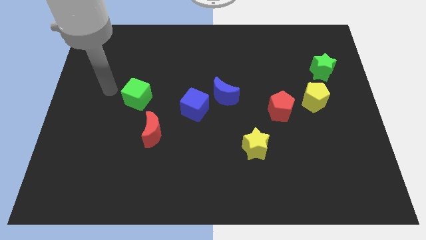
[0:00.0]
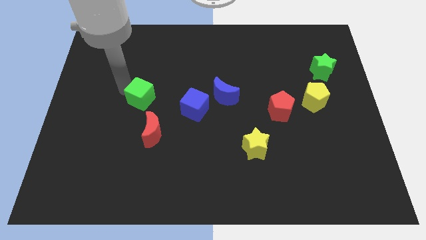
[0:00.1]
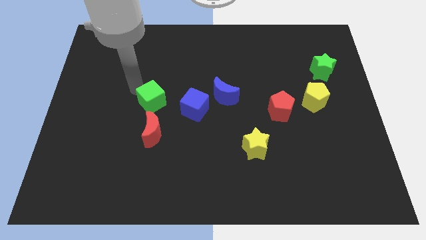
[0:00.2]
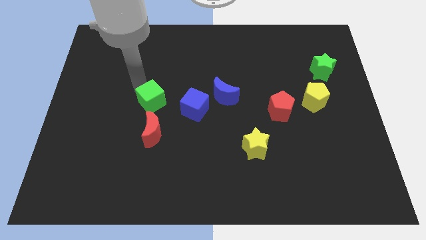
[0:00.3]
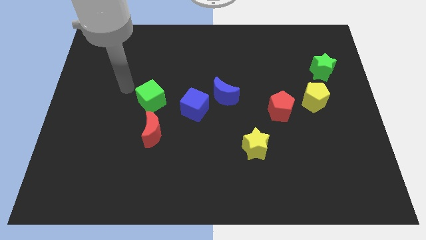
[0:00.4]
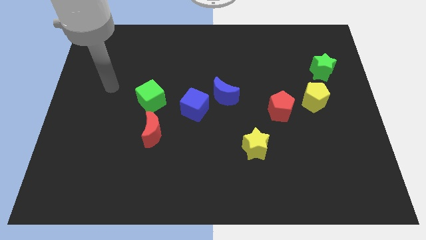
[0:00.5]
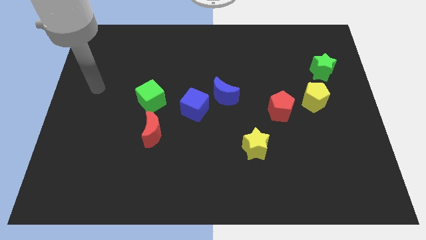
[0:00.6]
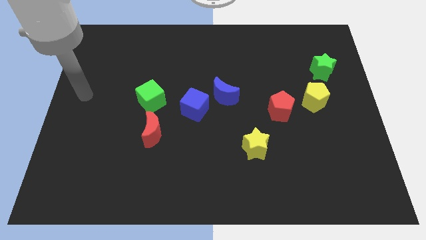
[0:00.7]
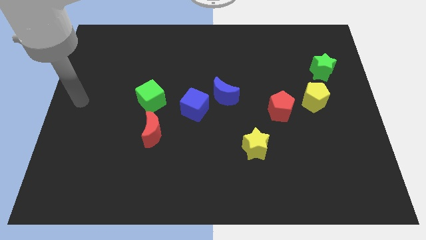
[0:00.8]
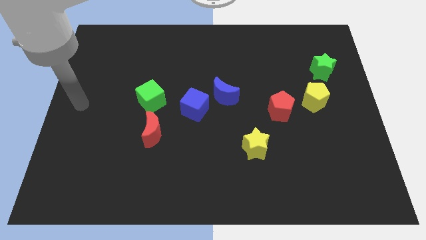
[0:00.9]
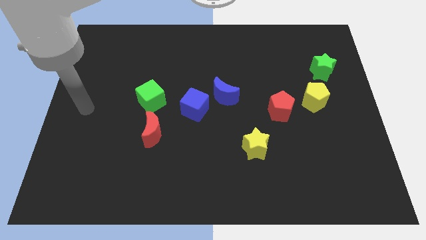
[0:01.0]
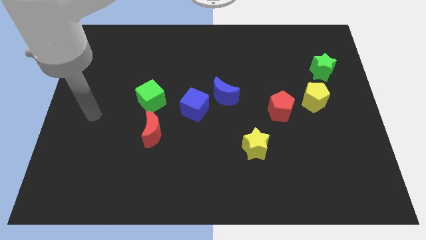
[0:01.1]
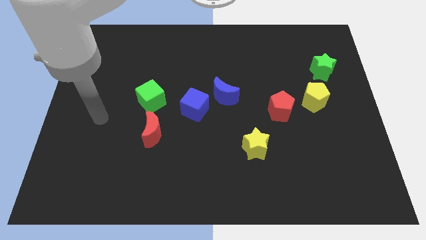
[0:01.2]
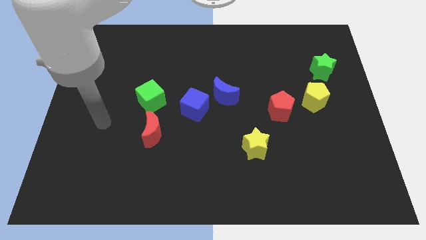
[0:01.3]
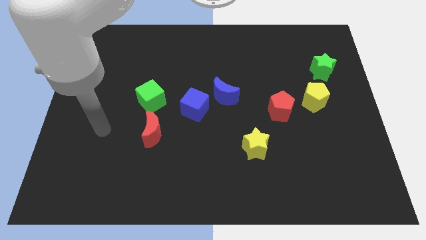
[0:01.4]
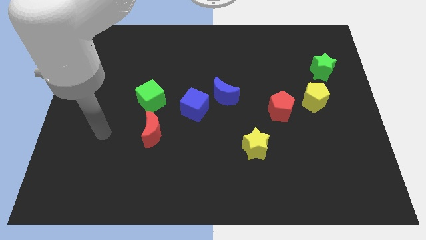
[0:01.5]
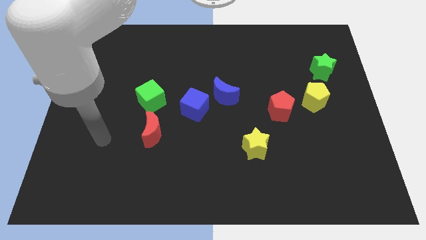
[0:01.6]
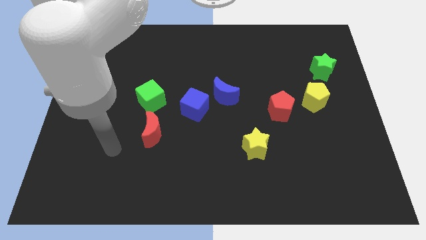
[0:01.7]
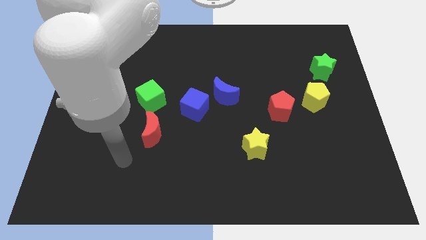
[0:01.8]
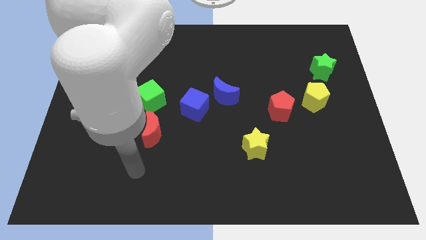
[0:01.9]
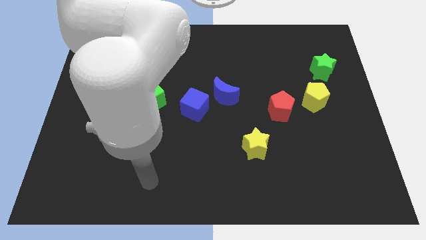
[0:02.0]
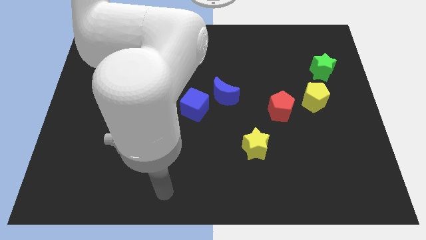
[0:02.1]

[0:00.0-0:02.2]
place your arm to bottom side of the board

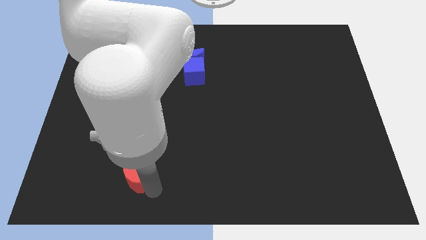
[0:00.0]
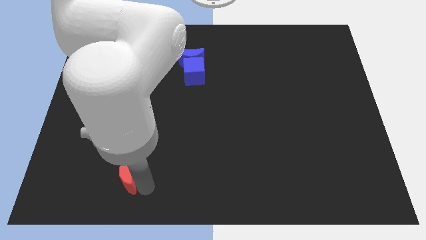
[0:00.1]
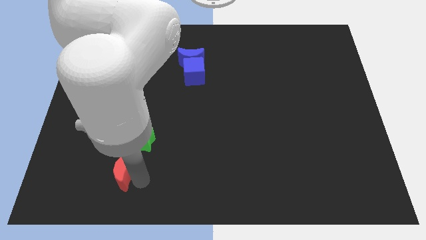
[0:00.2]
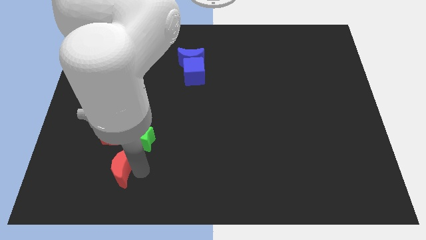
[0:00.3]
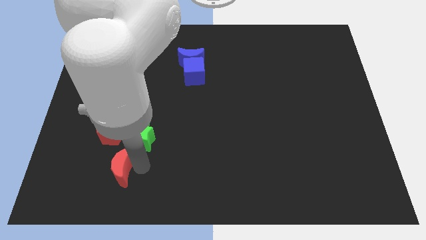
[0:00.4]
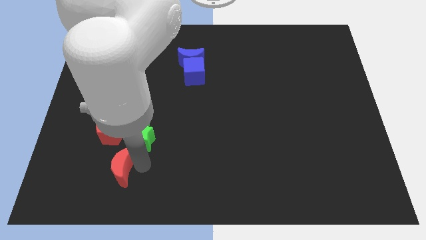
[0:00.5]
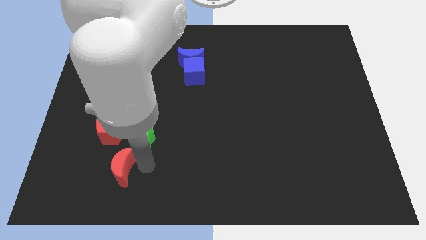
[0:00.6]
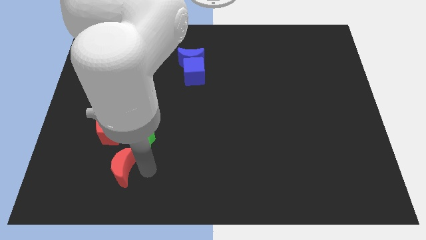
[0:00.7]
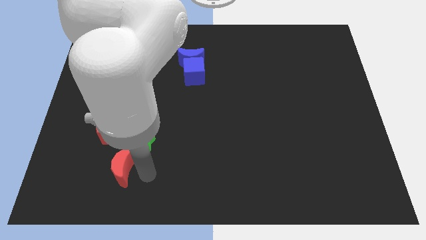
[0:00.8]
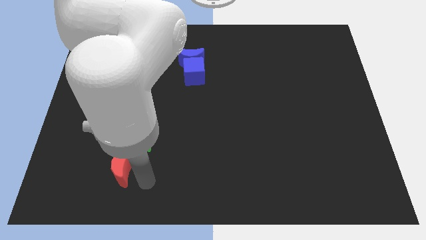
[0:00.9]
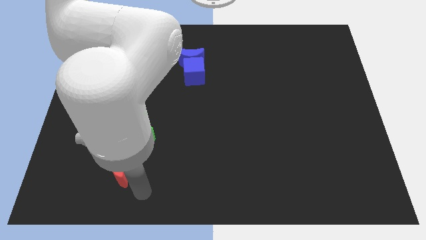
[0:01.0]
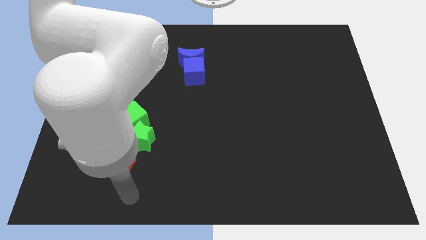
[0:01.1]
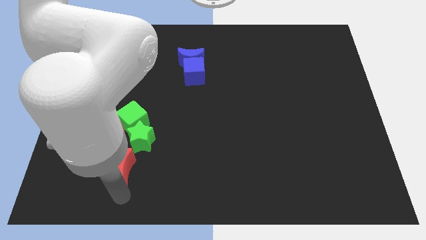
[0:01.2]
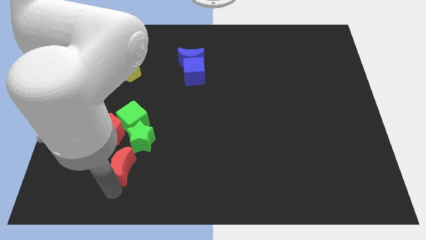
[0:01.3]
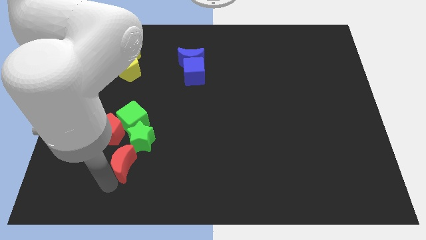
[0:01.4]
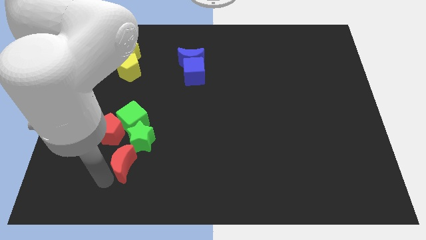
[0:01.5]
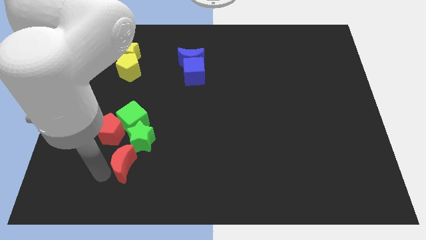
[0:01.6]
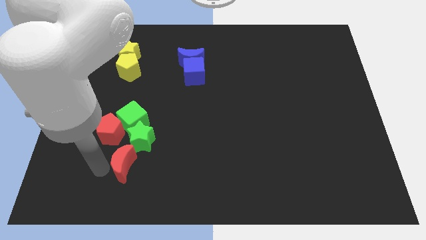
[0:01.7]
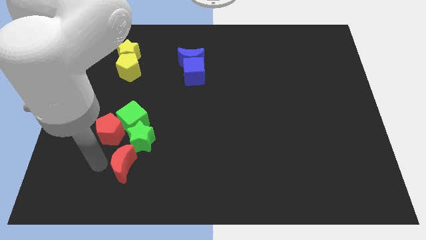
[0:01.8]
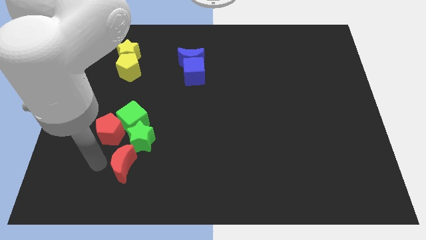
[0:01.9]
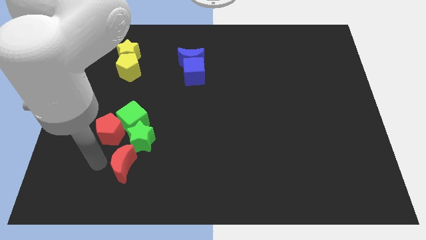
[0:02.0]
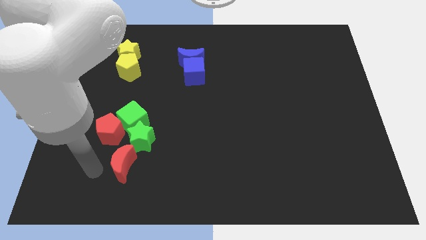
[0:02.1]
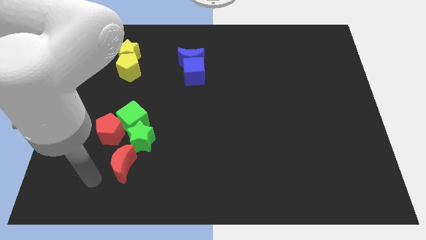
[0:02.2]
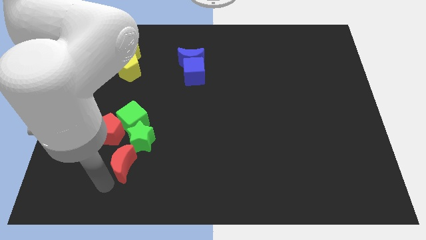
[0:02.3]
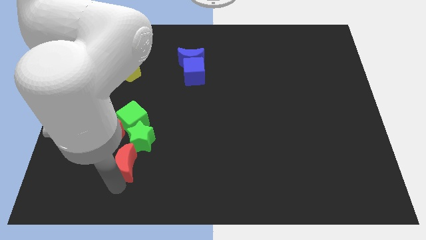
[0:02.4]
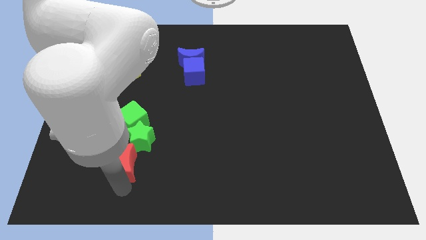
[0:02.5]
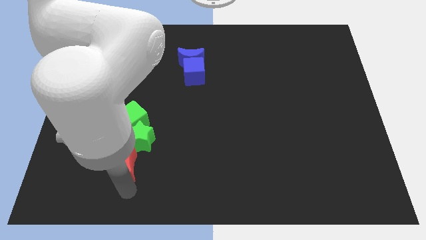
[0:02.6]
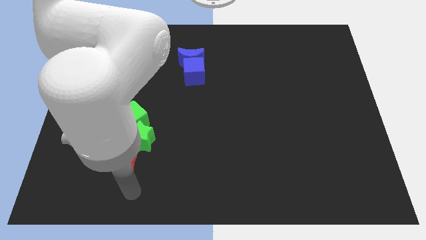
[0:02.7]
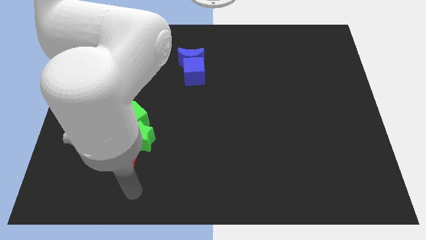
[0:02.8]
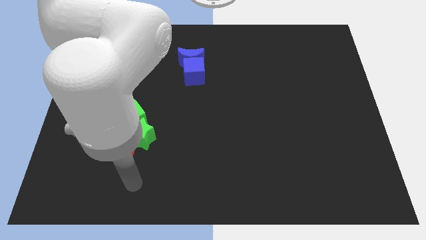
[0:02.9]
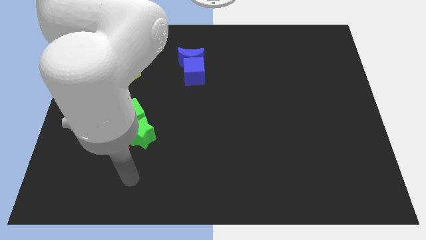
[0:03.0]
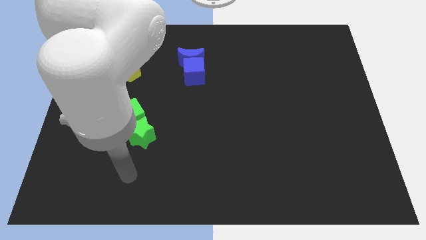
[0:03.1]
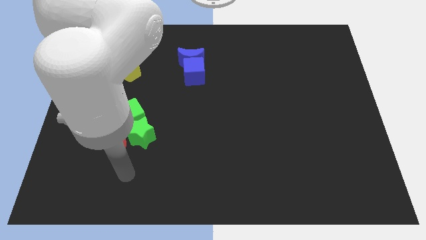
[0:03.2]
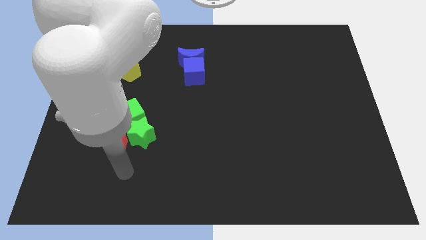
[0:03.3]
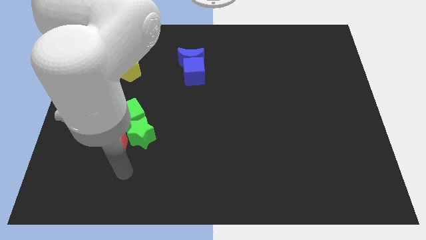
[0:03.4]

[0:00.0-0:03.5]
group up the two red blocks

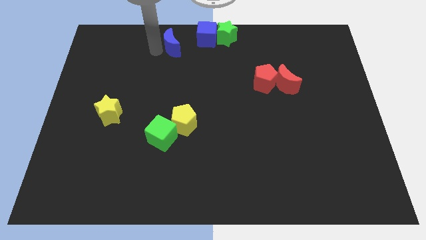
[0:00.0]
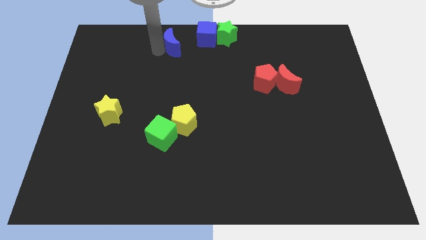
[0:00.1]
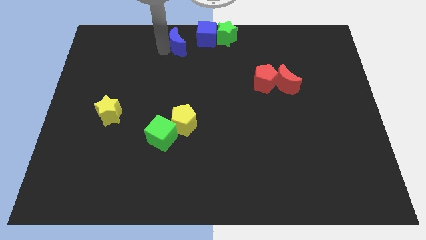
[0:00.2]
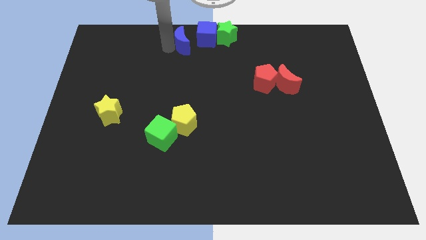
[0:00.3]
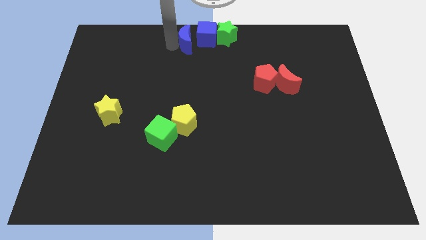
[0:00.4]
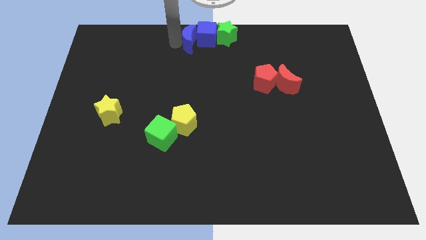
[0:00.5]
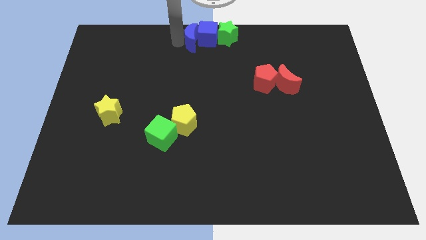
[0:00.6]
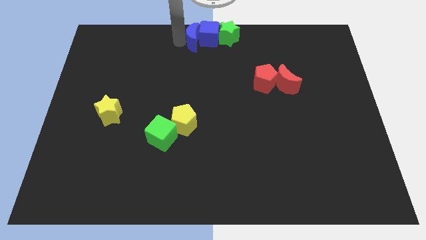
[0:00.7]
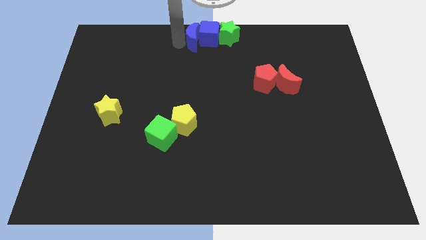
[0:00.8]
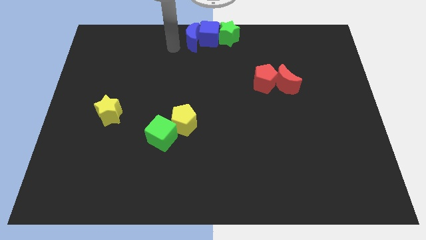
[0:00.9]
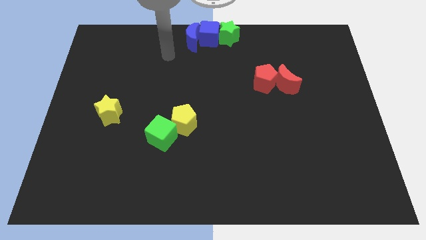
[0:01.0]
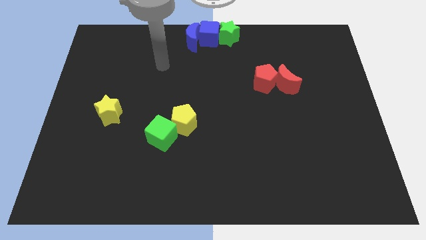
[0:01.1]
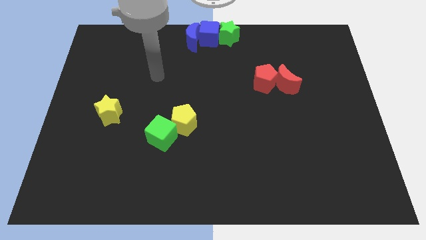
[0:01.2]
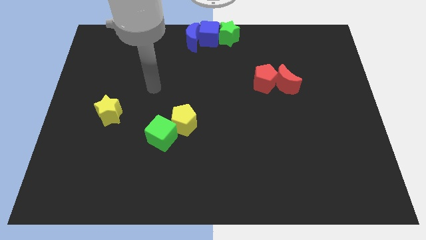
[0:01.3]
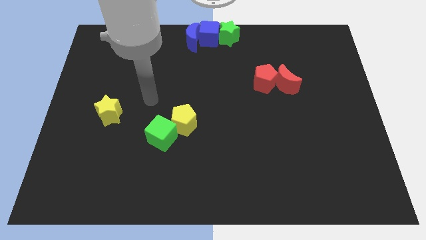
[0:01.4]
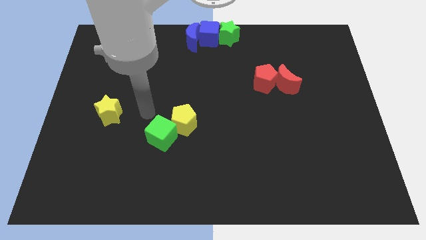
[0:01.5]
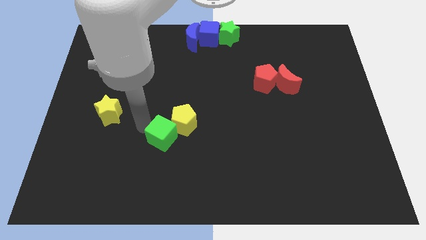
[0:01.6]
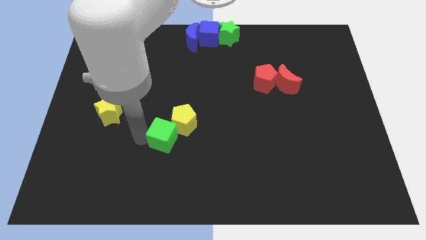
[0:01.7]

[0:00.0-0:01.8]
push the blue moon into the blue cube

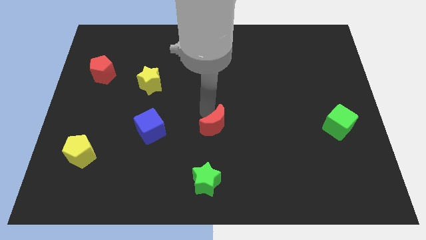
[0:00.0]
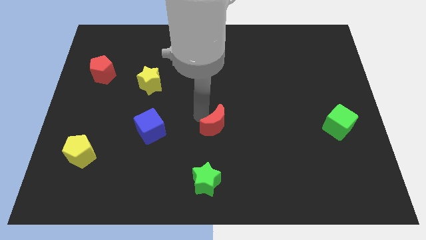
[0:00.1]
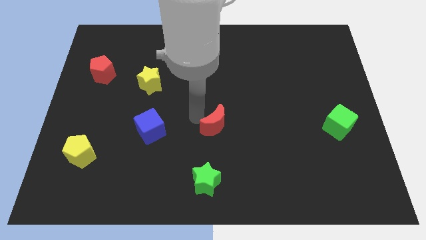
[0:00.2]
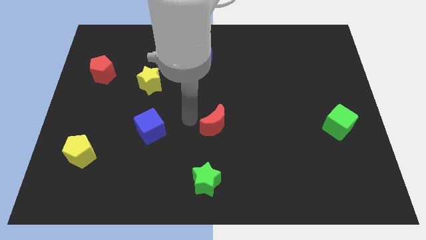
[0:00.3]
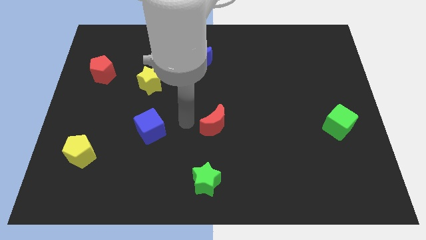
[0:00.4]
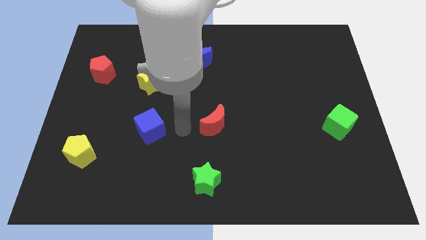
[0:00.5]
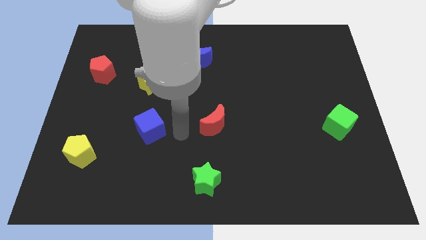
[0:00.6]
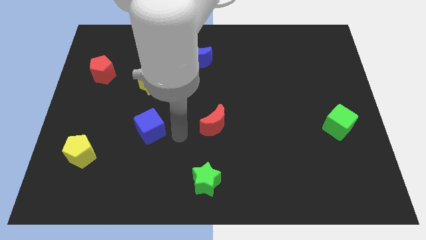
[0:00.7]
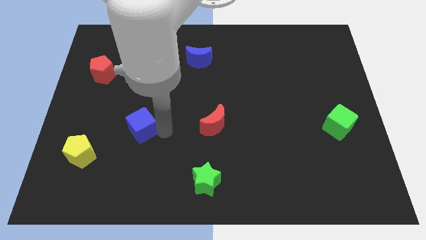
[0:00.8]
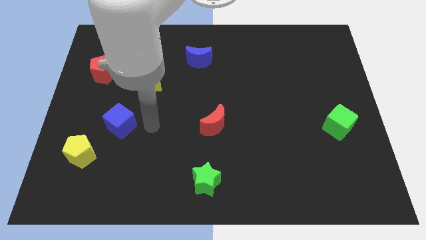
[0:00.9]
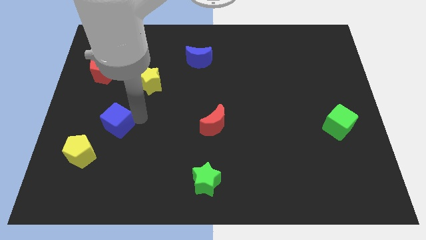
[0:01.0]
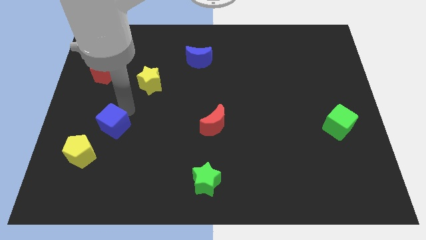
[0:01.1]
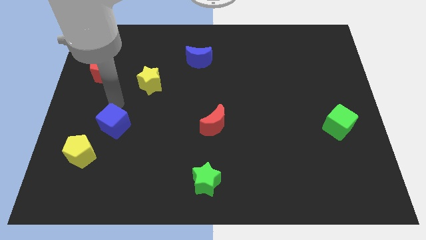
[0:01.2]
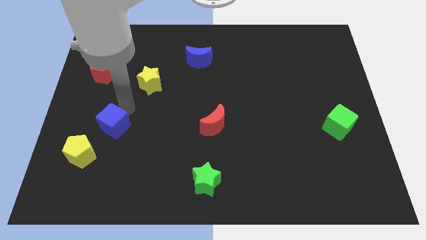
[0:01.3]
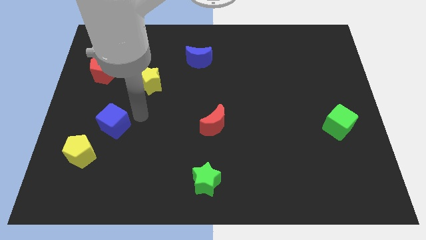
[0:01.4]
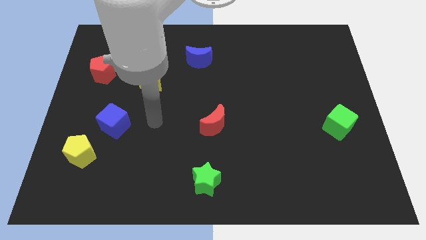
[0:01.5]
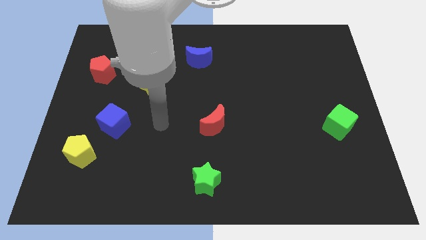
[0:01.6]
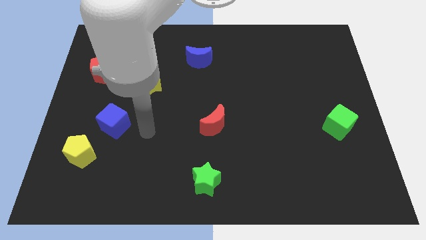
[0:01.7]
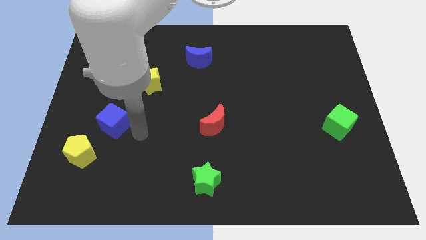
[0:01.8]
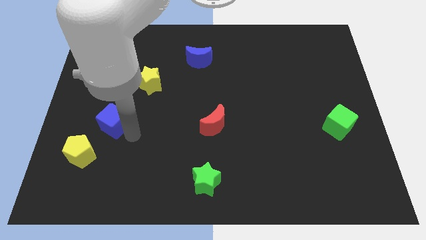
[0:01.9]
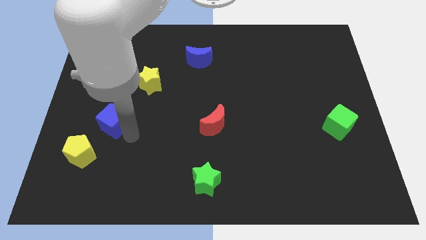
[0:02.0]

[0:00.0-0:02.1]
place the blue cube in between the yellow blocks
